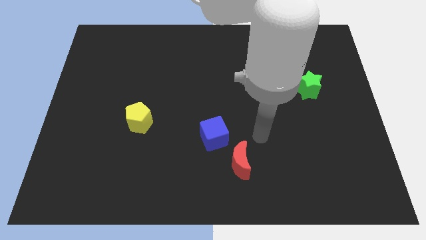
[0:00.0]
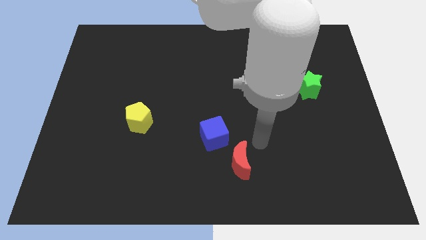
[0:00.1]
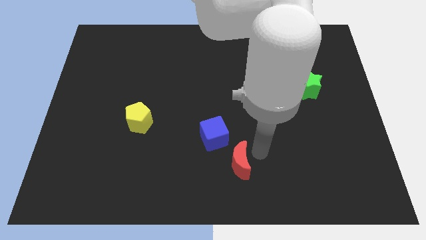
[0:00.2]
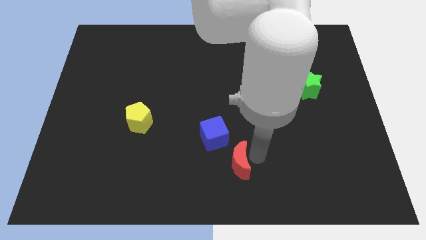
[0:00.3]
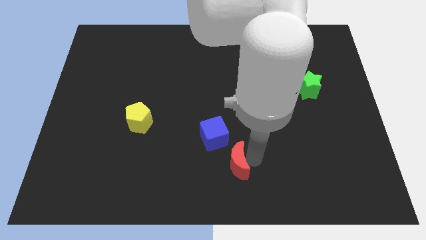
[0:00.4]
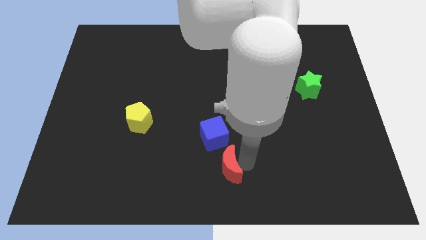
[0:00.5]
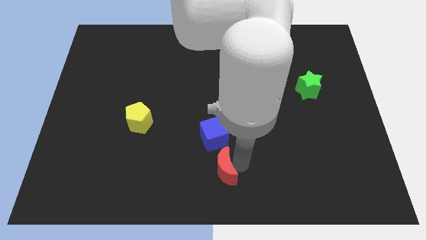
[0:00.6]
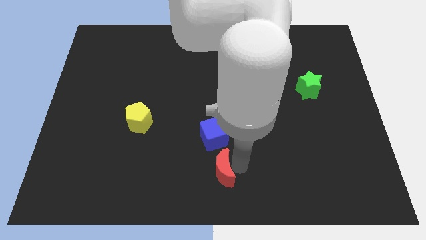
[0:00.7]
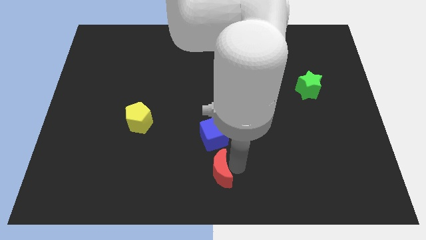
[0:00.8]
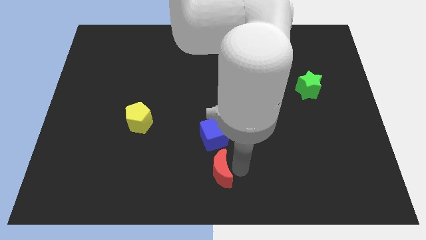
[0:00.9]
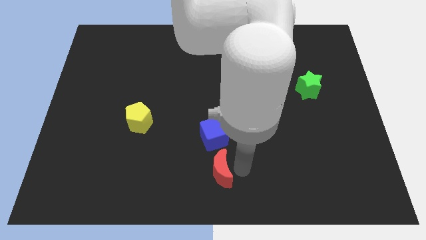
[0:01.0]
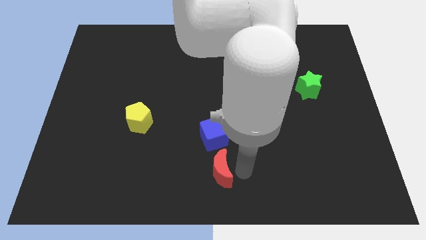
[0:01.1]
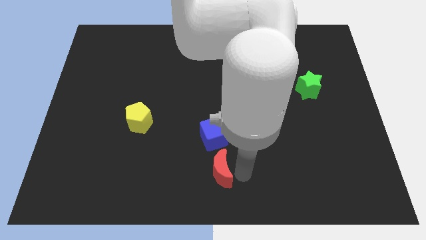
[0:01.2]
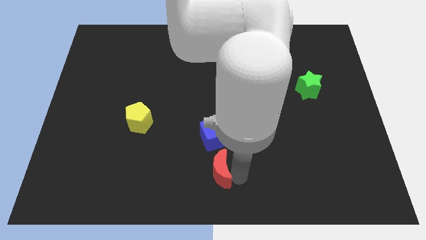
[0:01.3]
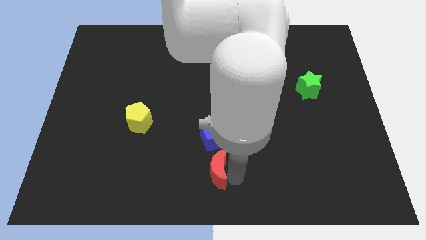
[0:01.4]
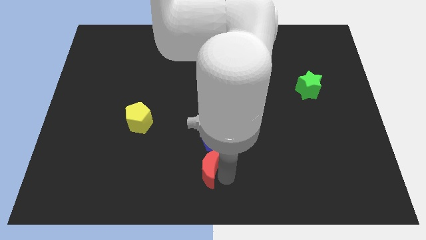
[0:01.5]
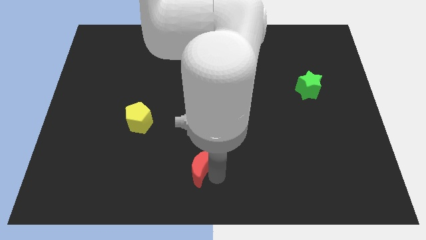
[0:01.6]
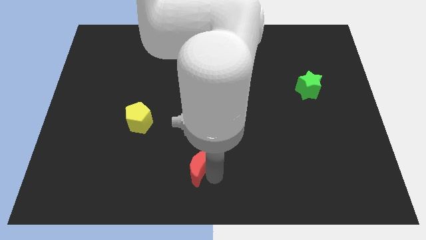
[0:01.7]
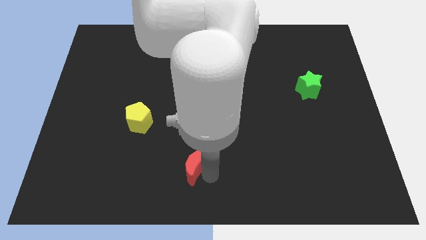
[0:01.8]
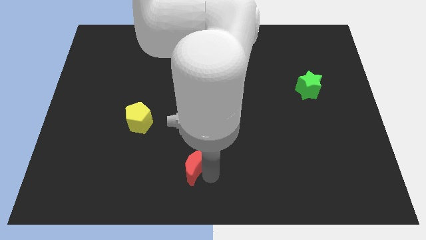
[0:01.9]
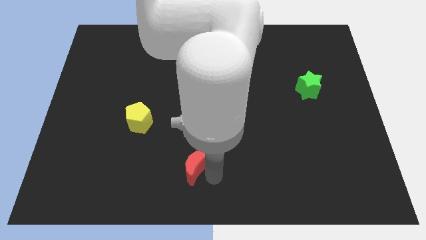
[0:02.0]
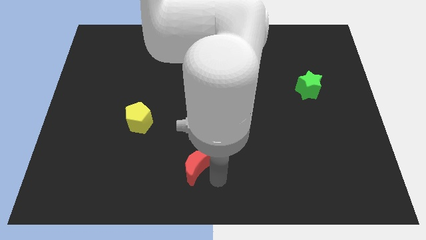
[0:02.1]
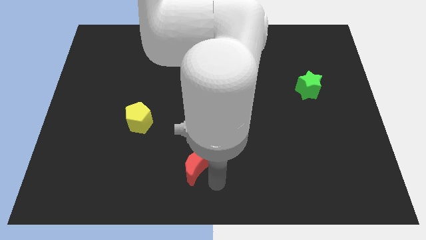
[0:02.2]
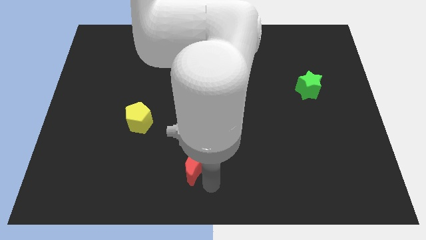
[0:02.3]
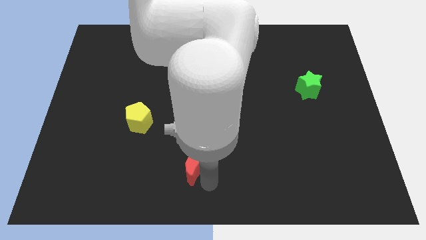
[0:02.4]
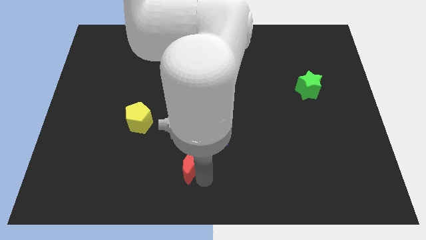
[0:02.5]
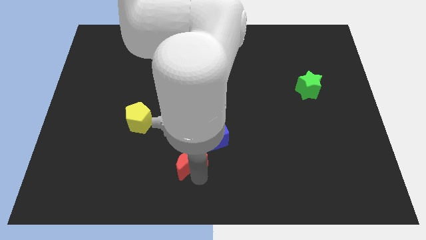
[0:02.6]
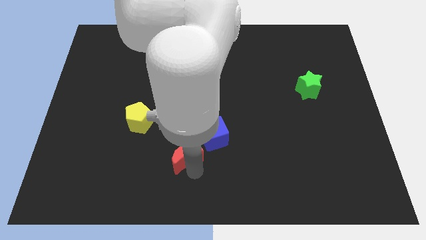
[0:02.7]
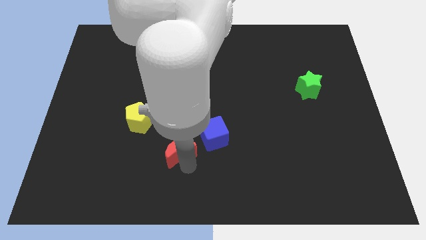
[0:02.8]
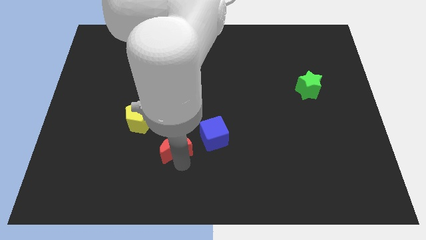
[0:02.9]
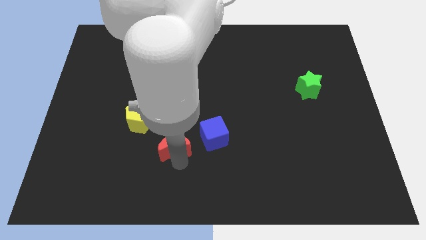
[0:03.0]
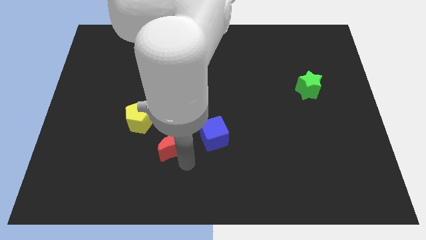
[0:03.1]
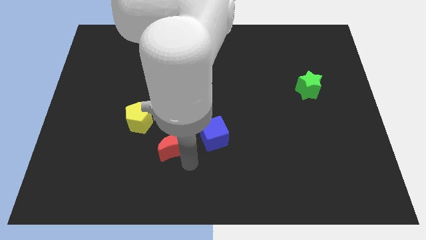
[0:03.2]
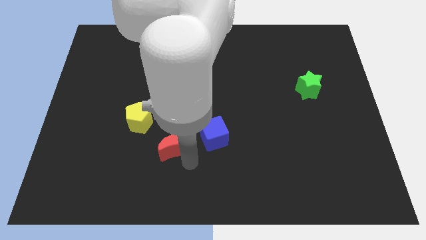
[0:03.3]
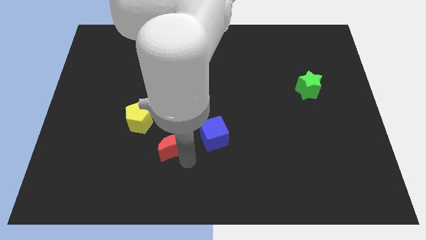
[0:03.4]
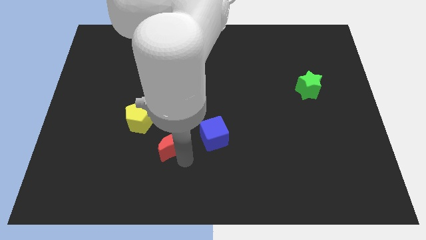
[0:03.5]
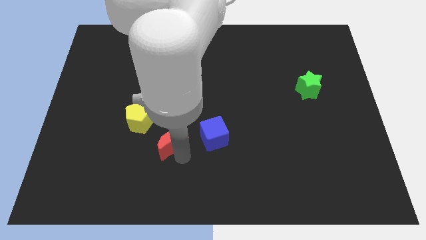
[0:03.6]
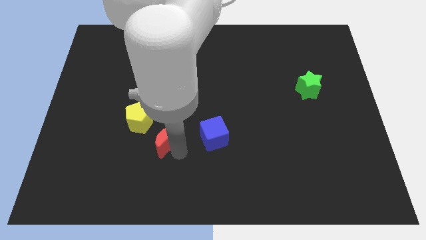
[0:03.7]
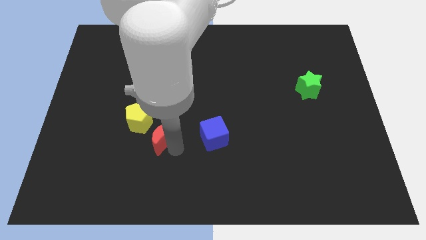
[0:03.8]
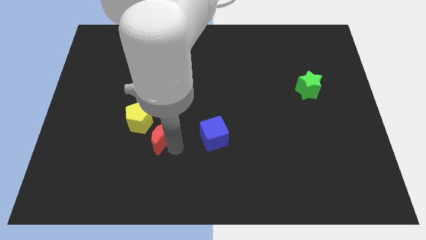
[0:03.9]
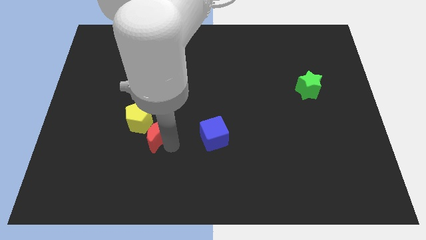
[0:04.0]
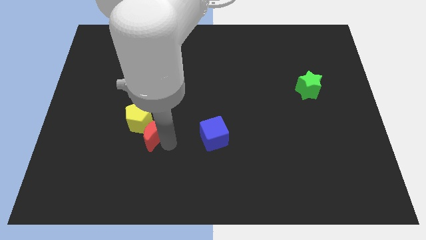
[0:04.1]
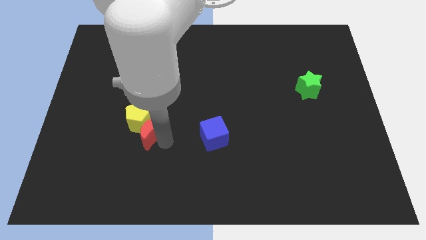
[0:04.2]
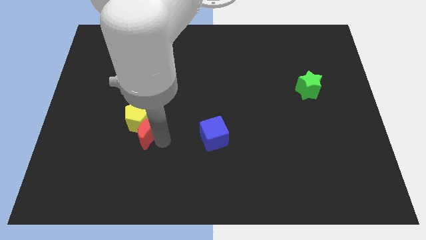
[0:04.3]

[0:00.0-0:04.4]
push the moon next to the yellow pentagon

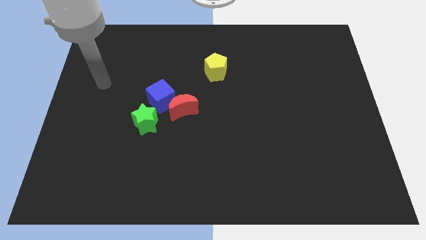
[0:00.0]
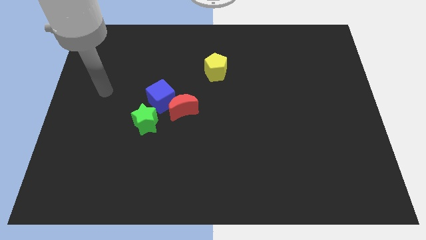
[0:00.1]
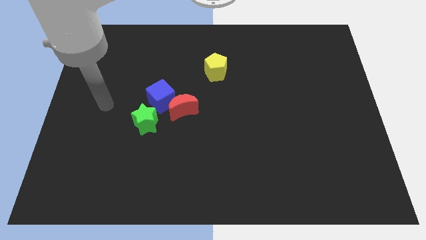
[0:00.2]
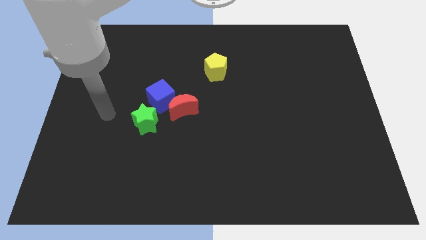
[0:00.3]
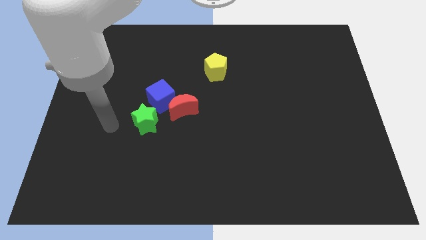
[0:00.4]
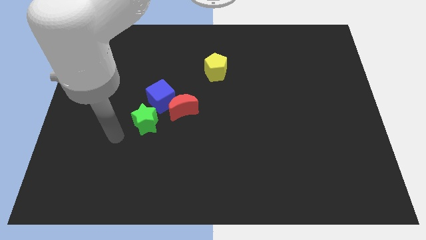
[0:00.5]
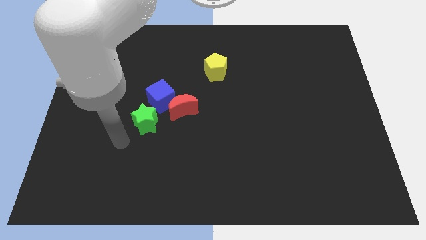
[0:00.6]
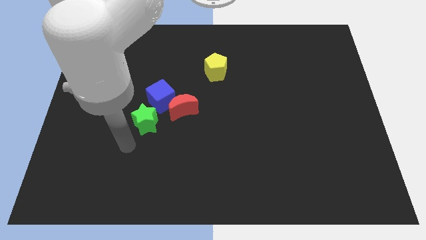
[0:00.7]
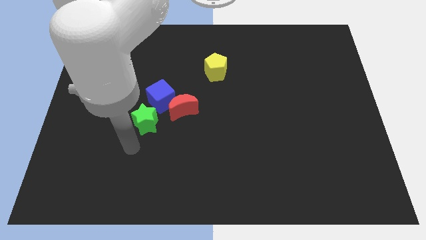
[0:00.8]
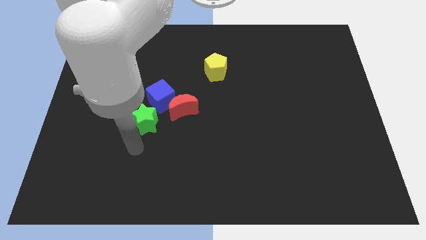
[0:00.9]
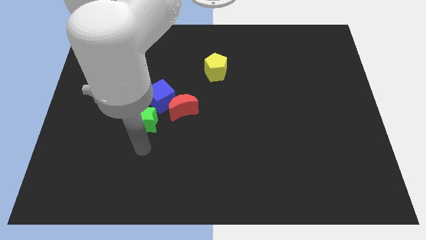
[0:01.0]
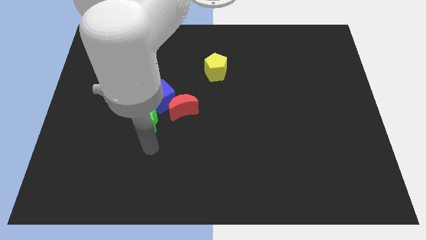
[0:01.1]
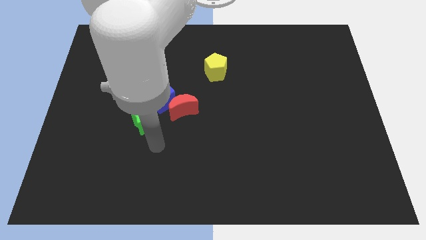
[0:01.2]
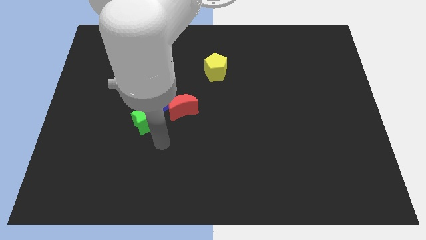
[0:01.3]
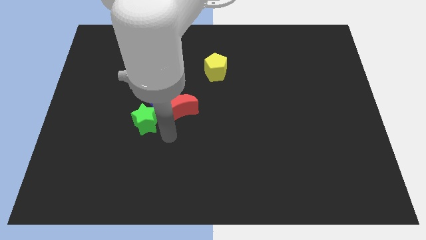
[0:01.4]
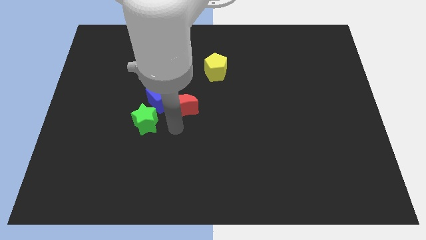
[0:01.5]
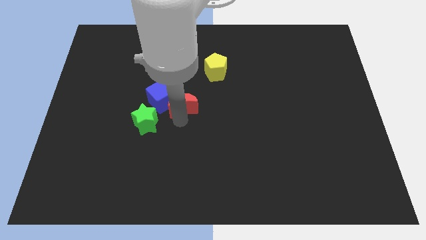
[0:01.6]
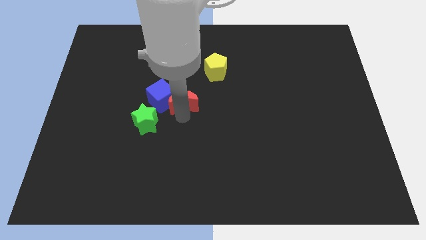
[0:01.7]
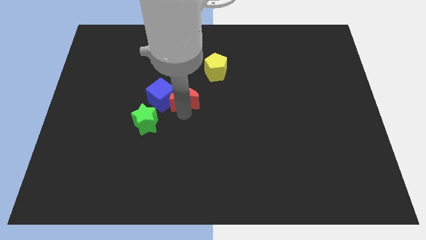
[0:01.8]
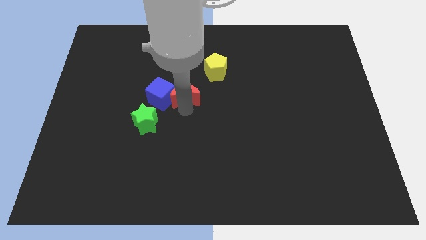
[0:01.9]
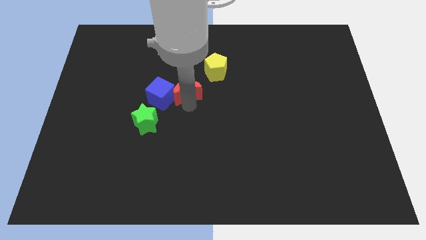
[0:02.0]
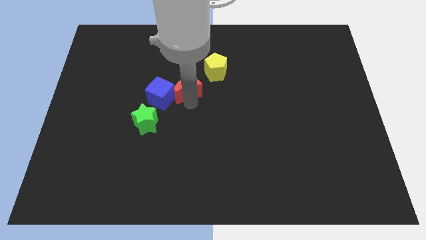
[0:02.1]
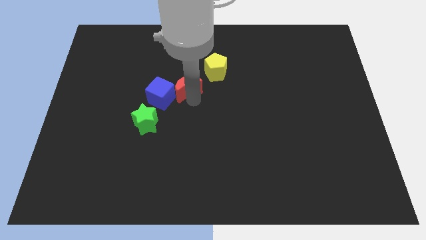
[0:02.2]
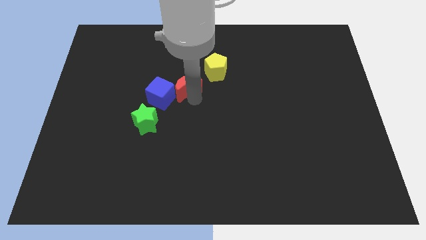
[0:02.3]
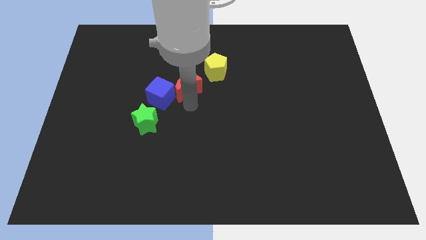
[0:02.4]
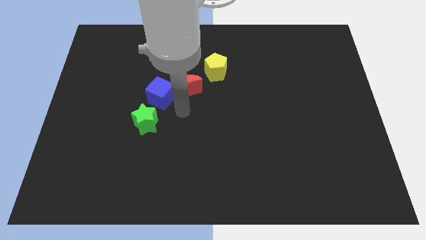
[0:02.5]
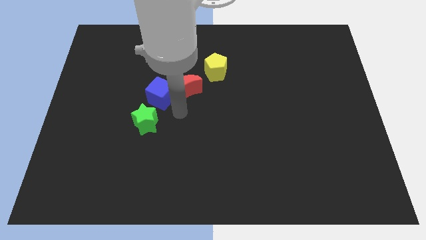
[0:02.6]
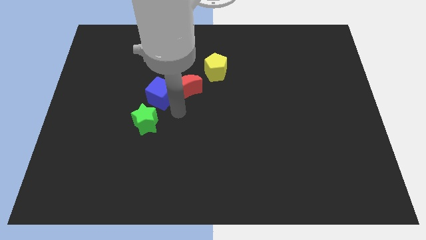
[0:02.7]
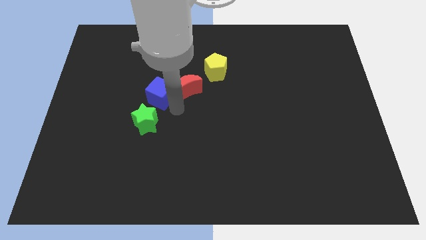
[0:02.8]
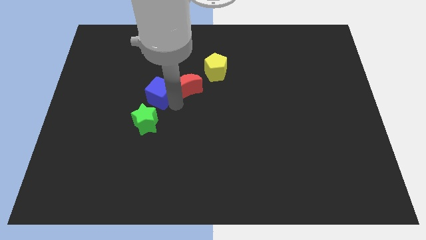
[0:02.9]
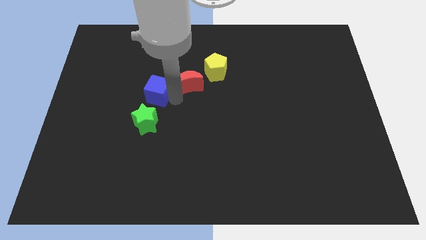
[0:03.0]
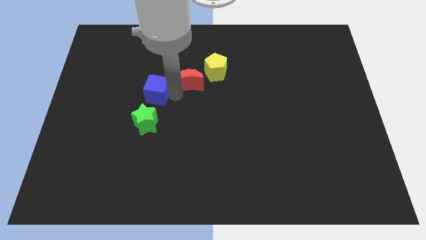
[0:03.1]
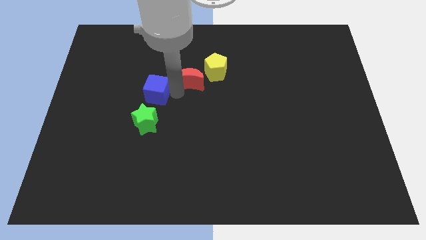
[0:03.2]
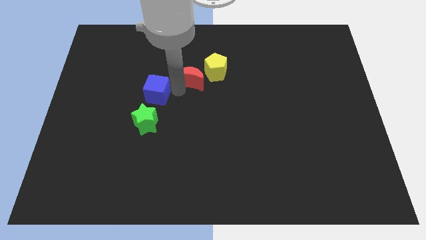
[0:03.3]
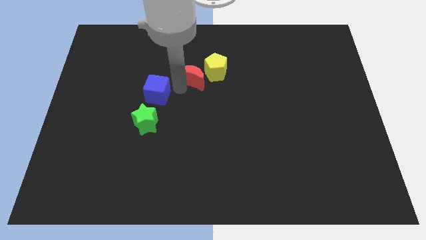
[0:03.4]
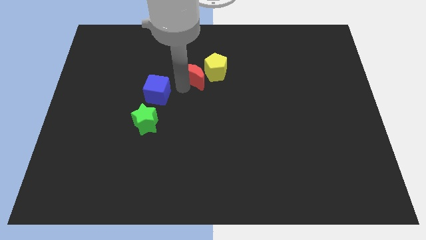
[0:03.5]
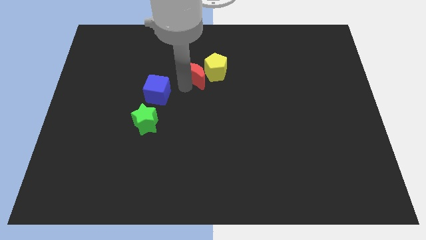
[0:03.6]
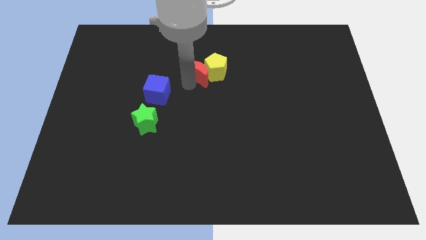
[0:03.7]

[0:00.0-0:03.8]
put the moon next to the pentagon

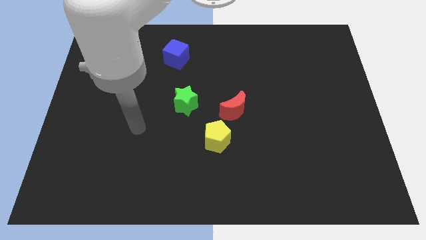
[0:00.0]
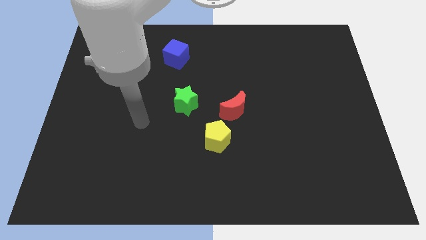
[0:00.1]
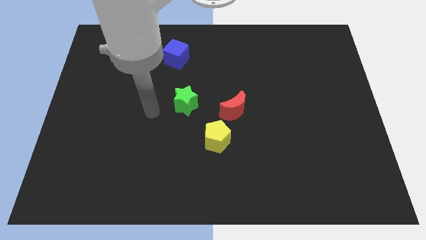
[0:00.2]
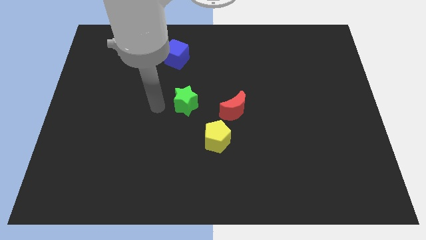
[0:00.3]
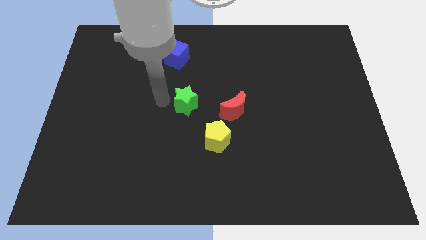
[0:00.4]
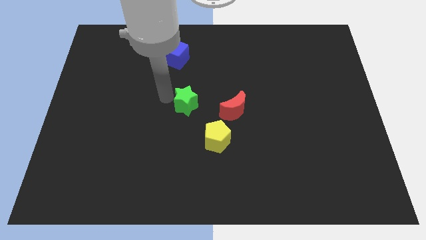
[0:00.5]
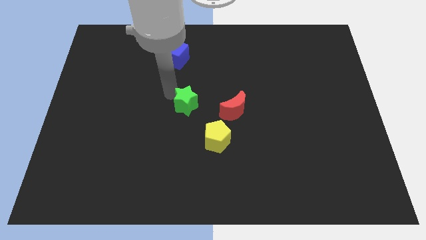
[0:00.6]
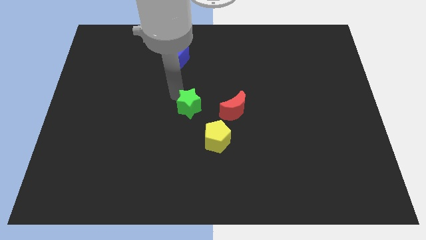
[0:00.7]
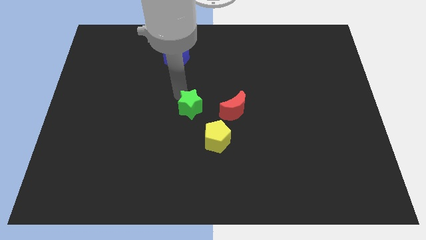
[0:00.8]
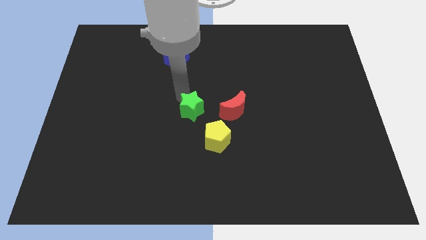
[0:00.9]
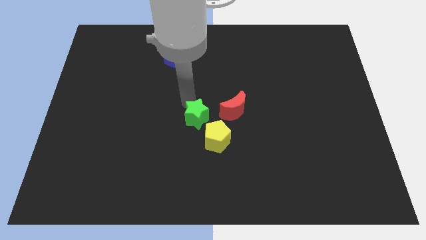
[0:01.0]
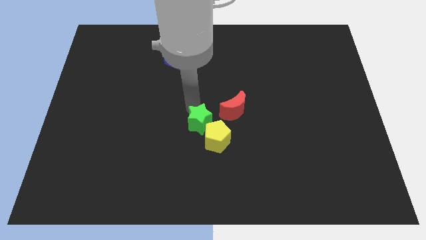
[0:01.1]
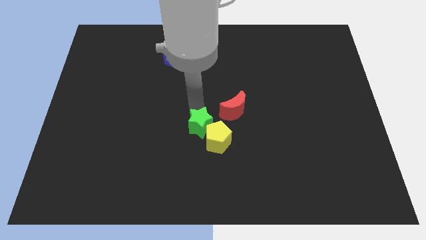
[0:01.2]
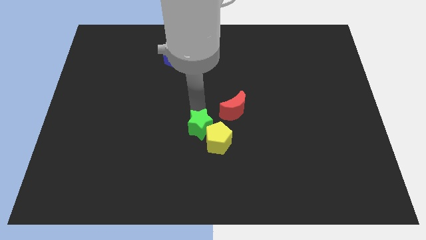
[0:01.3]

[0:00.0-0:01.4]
move the star close to the yellow pentagon
